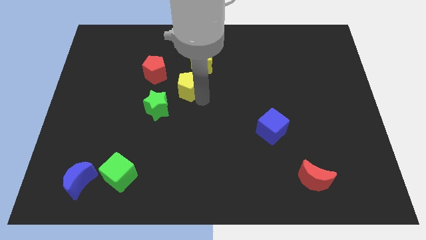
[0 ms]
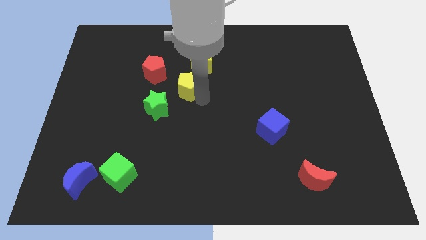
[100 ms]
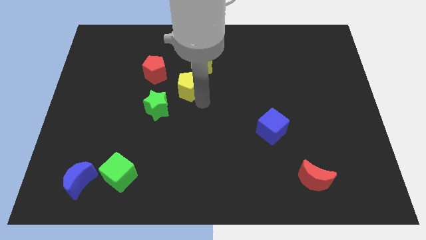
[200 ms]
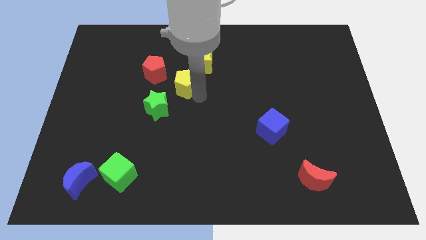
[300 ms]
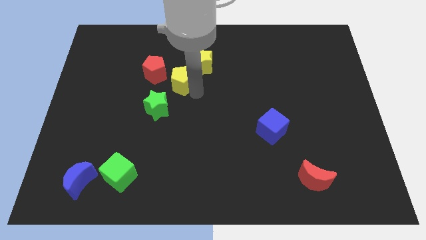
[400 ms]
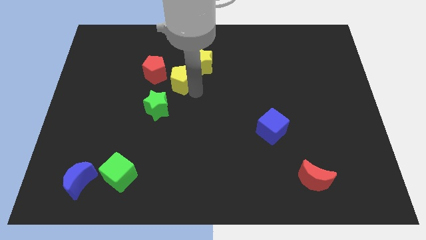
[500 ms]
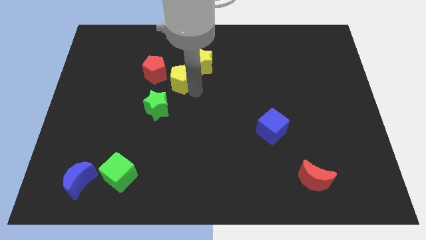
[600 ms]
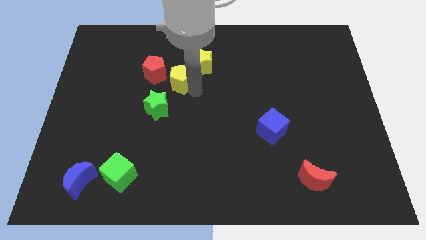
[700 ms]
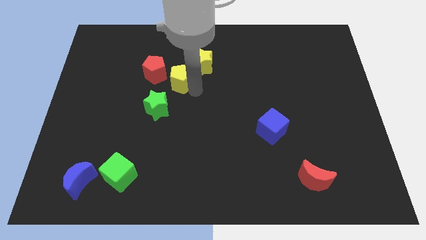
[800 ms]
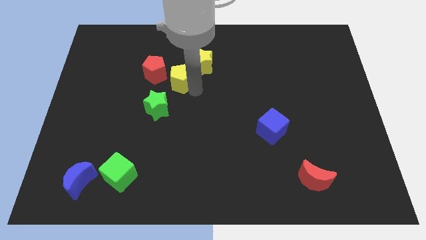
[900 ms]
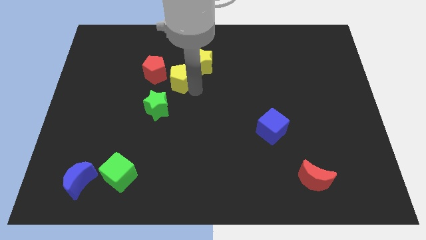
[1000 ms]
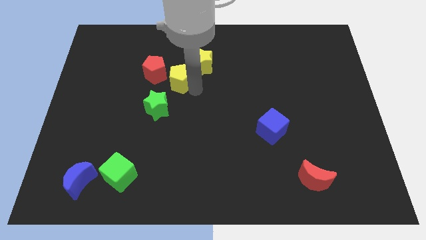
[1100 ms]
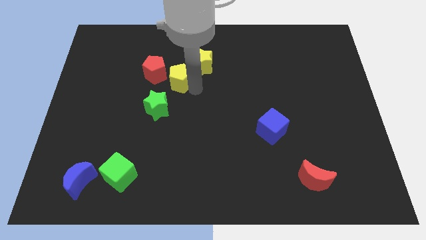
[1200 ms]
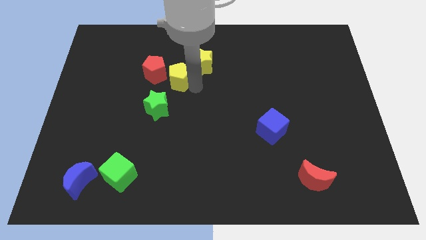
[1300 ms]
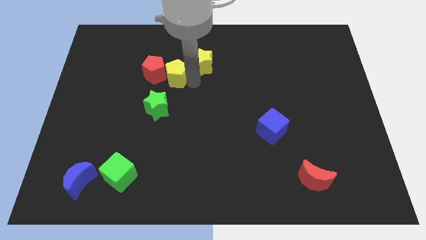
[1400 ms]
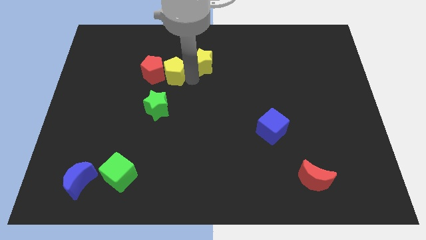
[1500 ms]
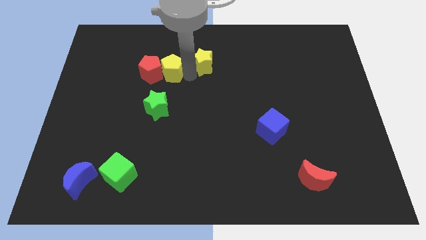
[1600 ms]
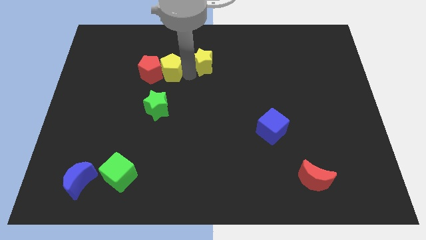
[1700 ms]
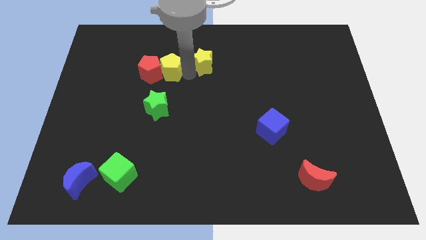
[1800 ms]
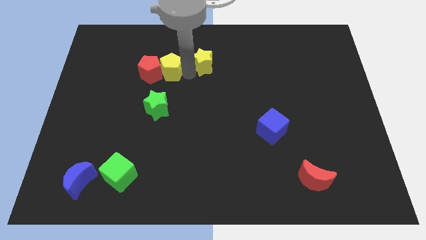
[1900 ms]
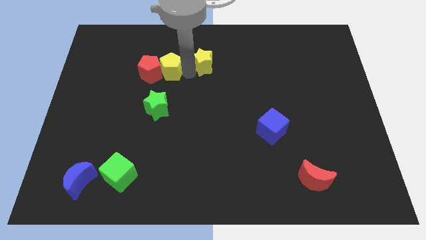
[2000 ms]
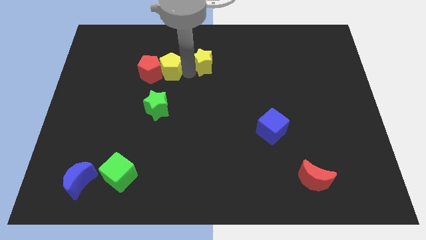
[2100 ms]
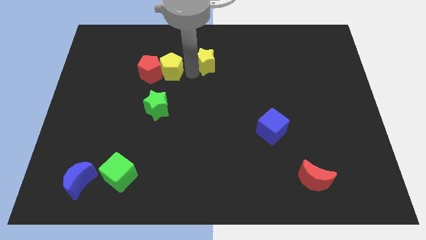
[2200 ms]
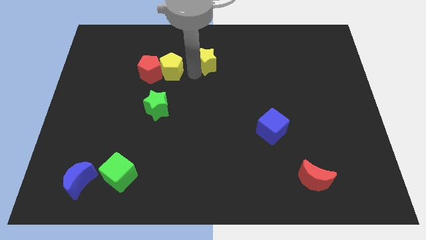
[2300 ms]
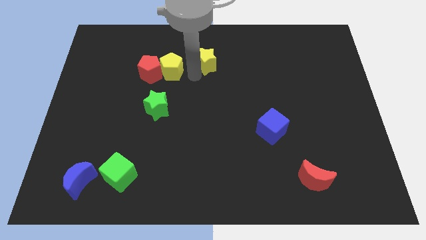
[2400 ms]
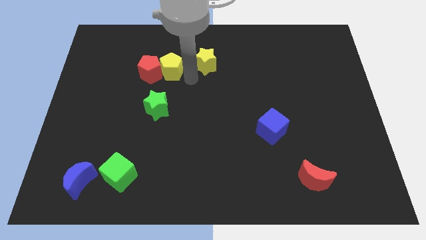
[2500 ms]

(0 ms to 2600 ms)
push the yellow pentagon to the red pentagon

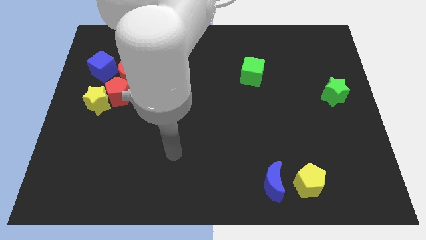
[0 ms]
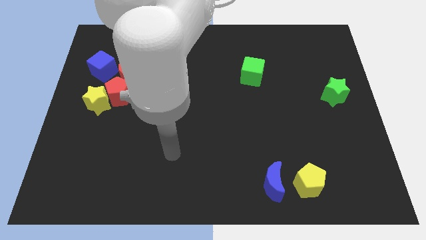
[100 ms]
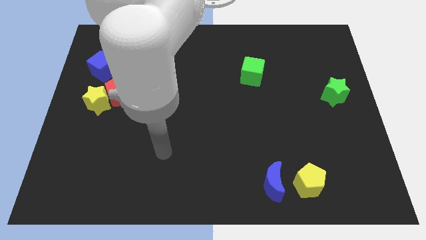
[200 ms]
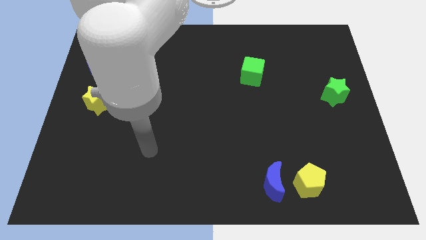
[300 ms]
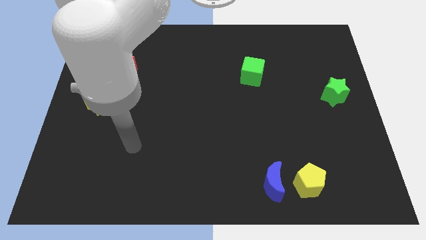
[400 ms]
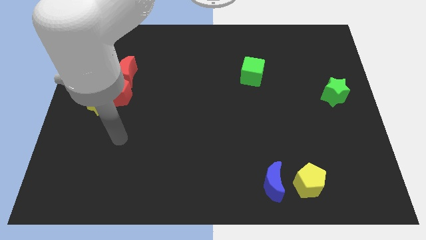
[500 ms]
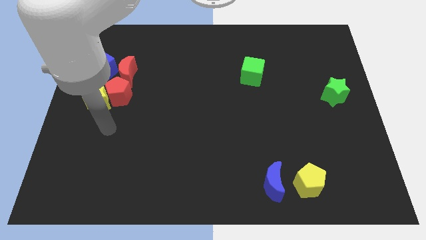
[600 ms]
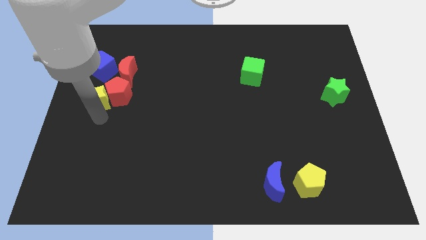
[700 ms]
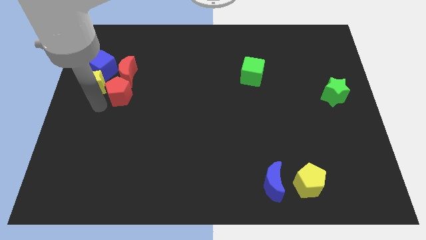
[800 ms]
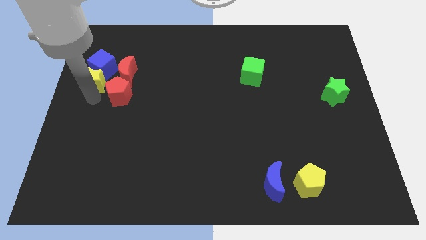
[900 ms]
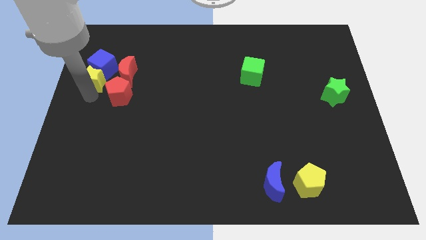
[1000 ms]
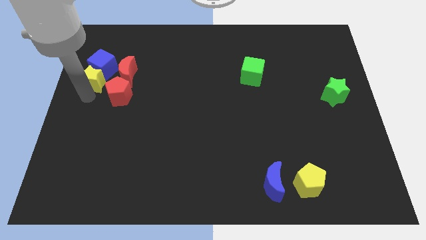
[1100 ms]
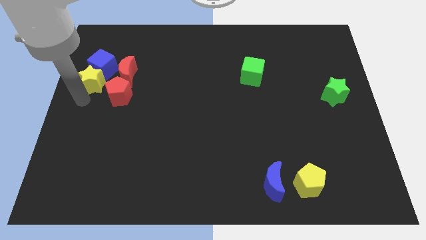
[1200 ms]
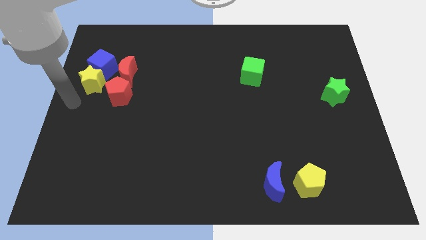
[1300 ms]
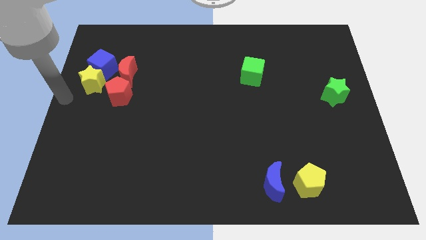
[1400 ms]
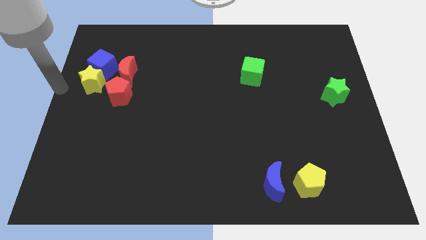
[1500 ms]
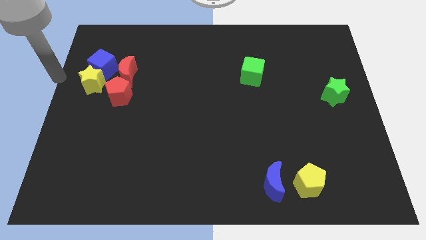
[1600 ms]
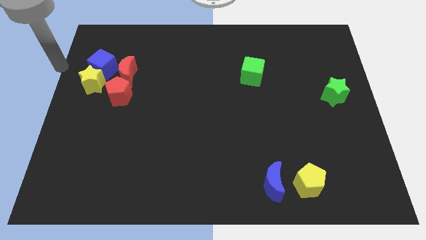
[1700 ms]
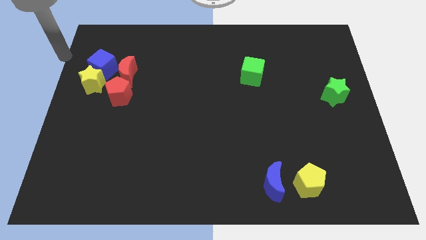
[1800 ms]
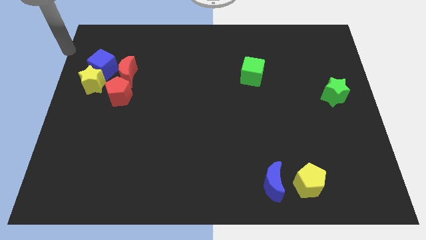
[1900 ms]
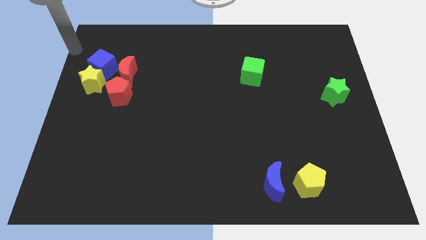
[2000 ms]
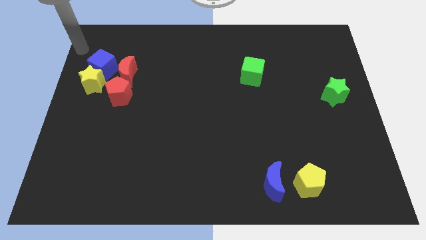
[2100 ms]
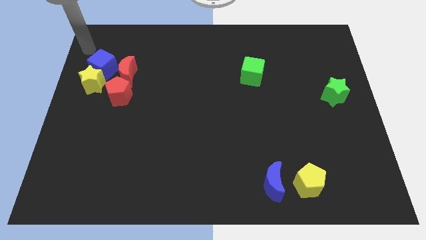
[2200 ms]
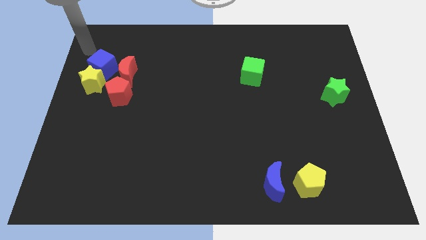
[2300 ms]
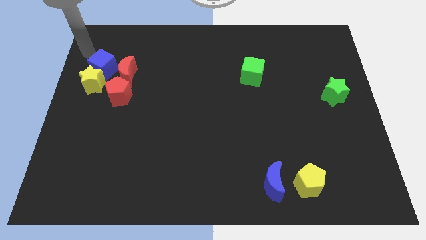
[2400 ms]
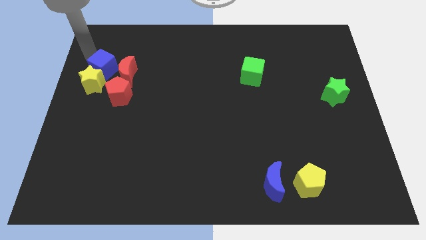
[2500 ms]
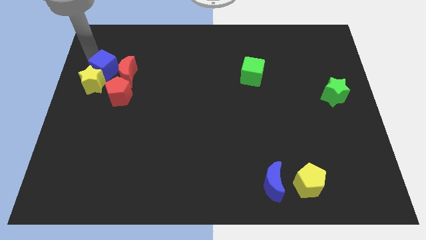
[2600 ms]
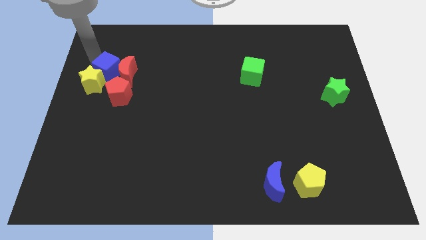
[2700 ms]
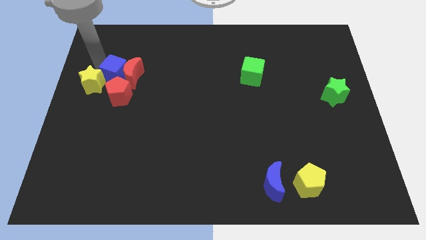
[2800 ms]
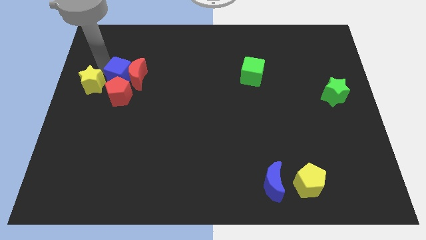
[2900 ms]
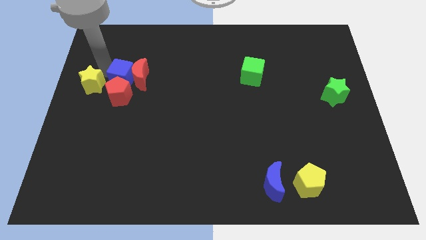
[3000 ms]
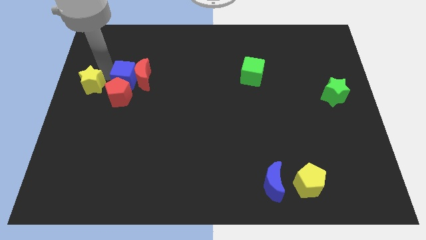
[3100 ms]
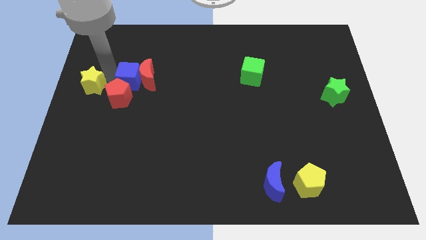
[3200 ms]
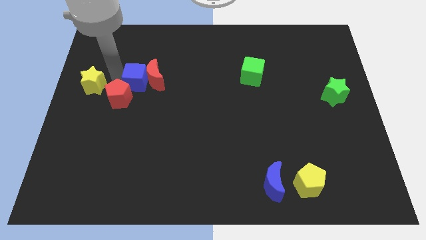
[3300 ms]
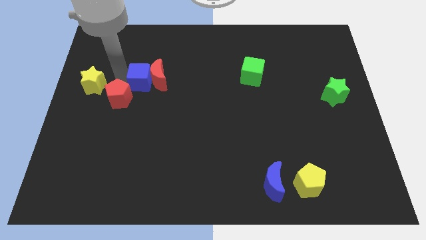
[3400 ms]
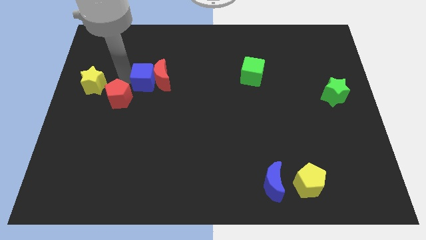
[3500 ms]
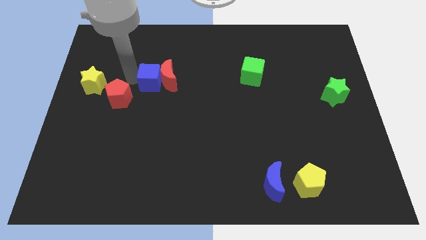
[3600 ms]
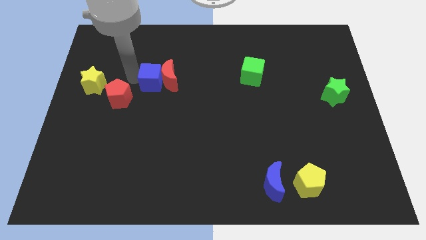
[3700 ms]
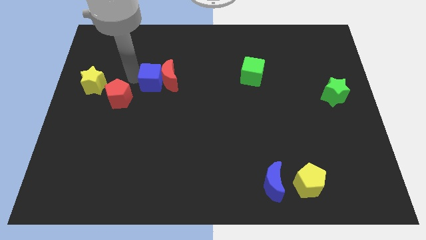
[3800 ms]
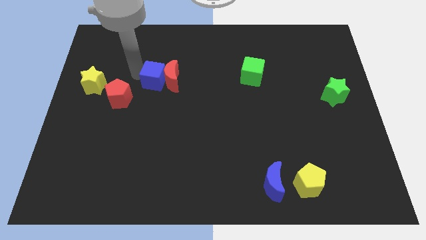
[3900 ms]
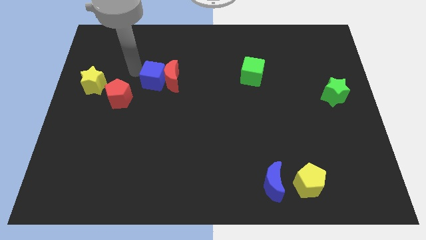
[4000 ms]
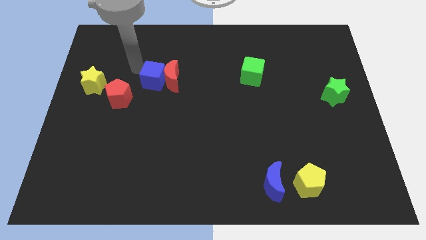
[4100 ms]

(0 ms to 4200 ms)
drag the blue cube slightly to the right

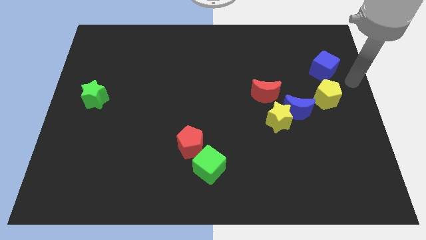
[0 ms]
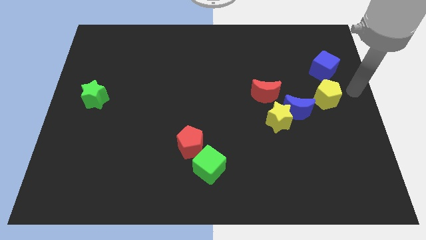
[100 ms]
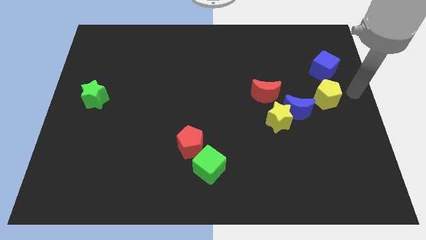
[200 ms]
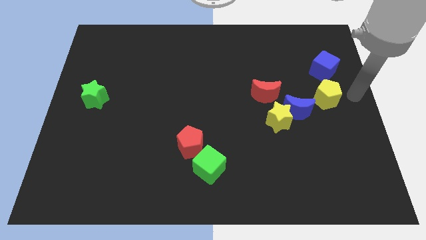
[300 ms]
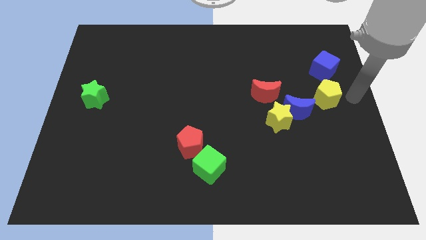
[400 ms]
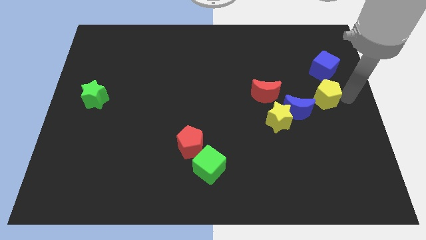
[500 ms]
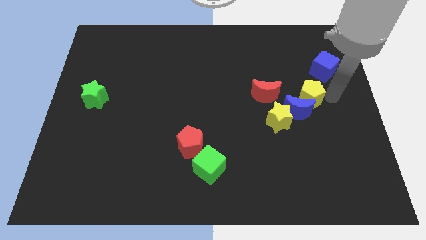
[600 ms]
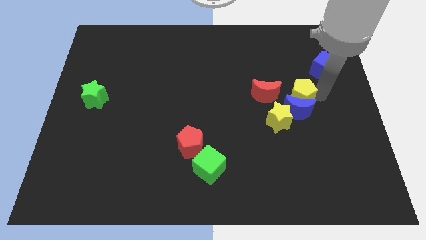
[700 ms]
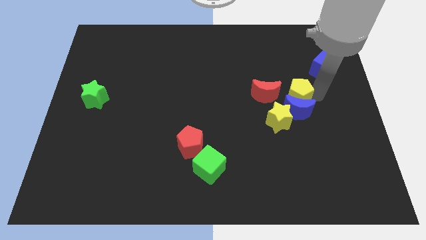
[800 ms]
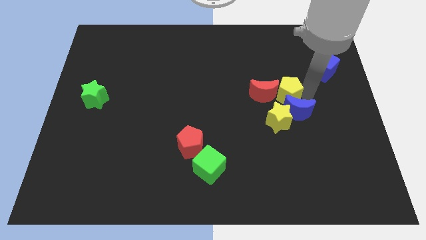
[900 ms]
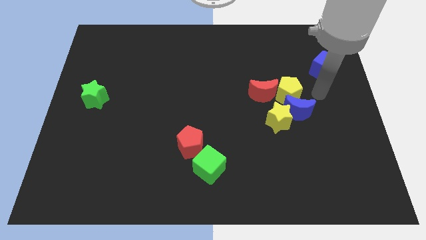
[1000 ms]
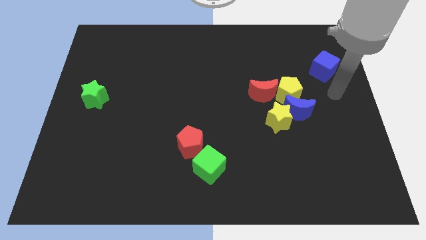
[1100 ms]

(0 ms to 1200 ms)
push yellow pentagon to the right of red moon

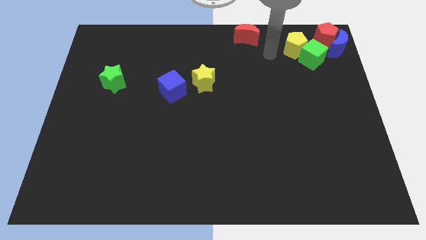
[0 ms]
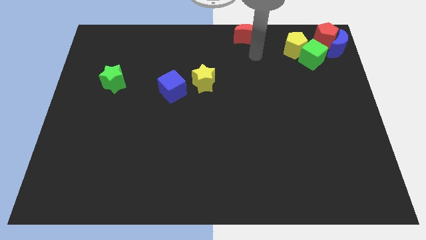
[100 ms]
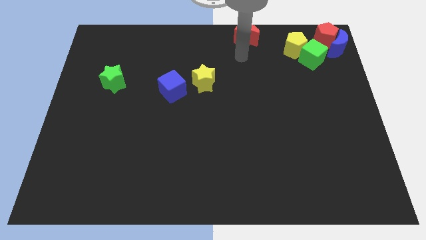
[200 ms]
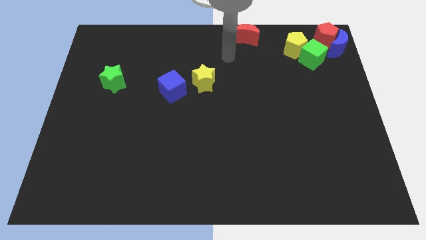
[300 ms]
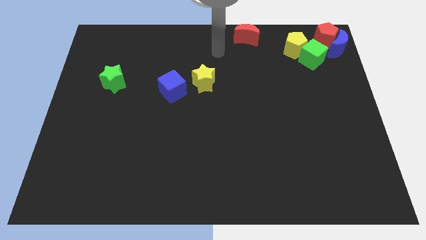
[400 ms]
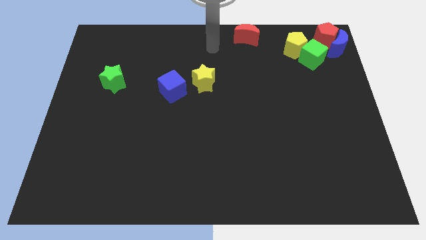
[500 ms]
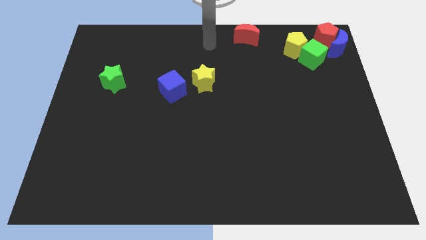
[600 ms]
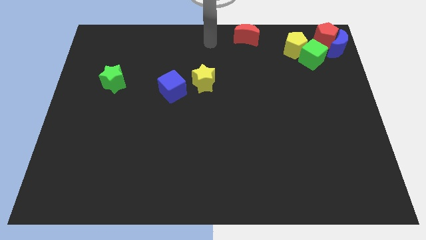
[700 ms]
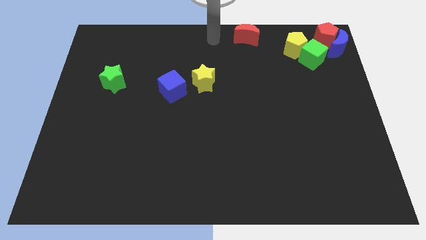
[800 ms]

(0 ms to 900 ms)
move your arm to the left of the red crescent

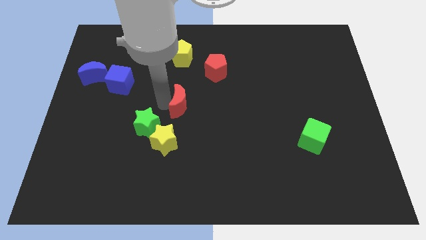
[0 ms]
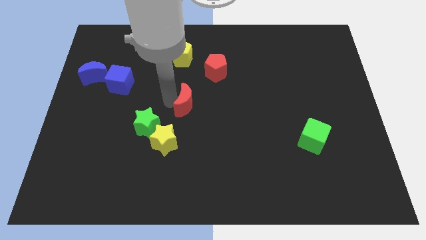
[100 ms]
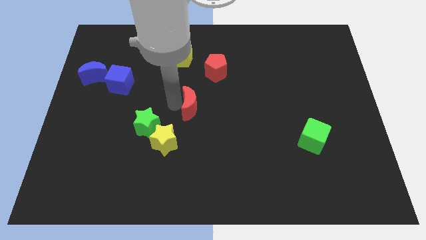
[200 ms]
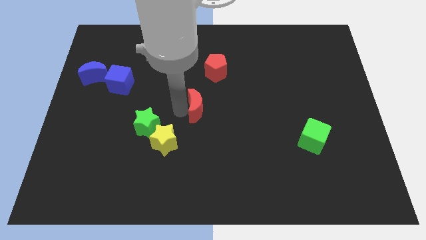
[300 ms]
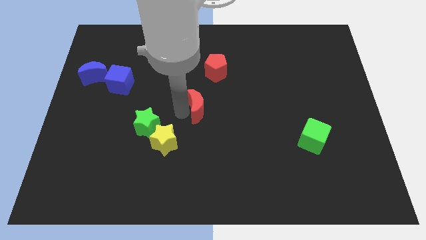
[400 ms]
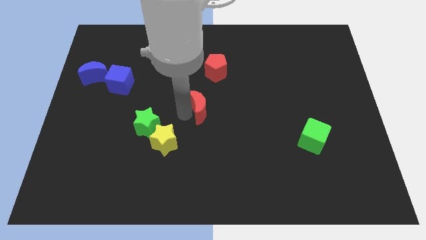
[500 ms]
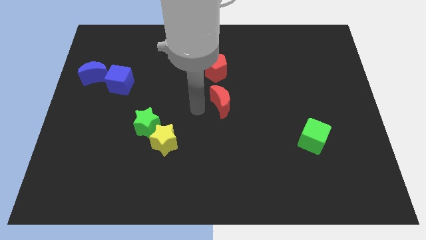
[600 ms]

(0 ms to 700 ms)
place the red crescent vertically below the red pentagon
